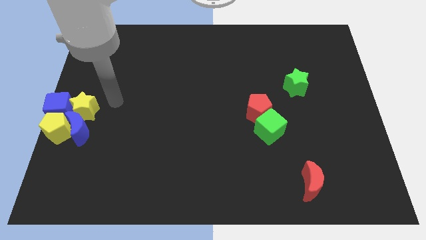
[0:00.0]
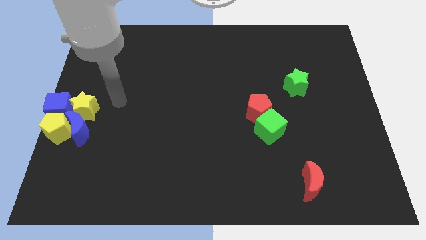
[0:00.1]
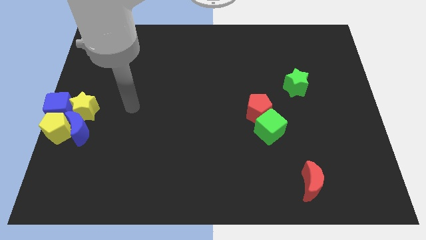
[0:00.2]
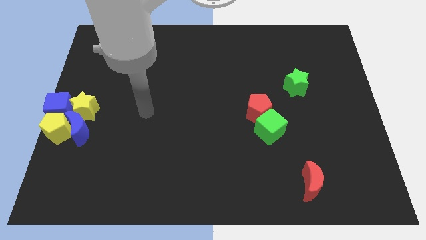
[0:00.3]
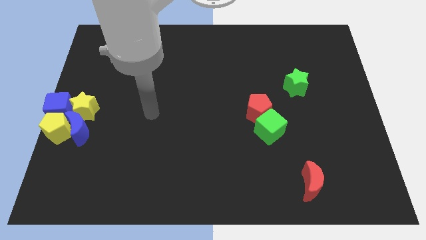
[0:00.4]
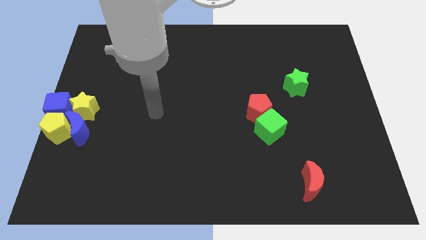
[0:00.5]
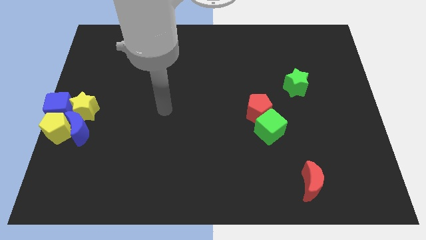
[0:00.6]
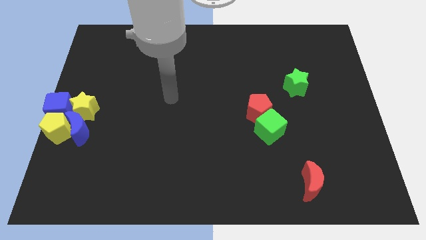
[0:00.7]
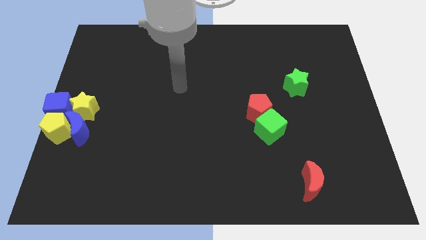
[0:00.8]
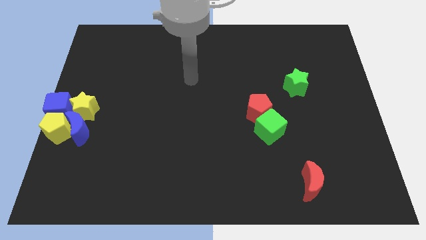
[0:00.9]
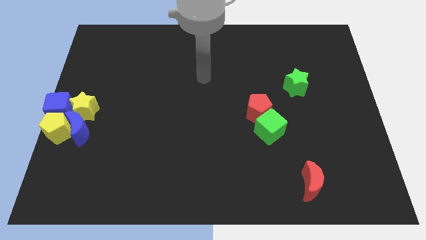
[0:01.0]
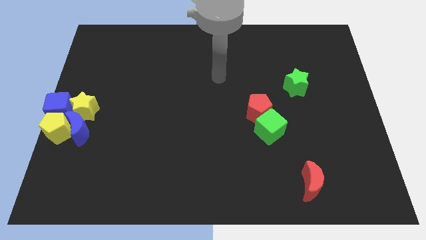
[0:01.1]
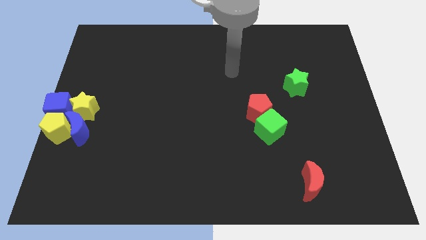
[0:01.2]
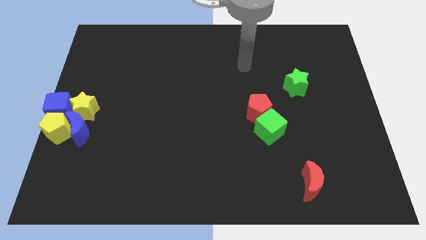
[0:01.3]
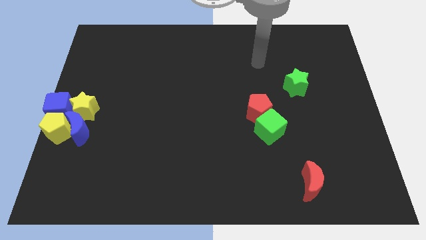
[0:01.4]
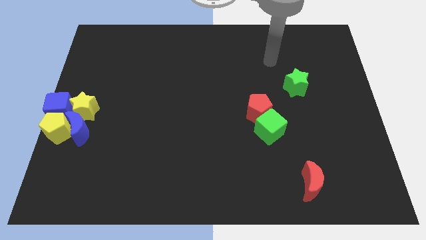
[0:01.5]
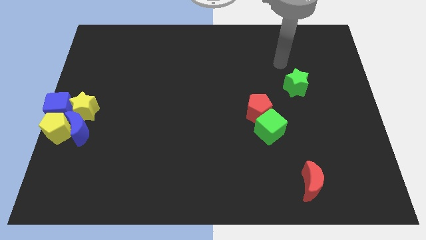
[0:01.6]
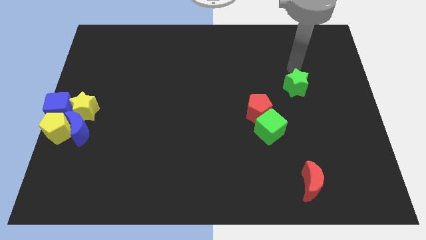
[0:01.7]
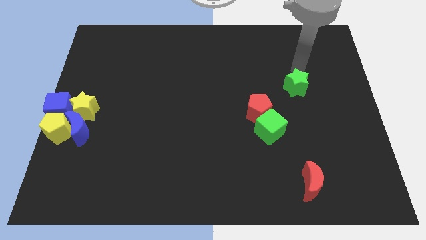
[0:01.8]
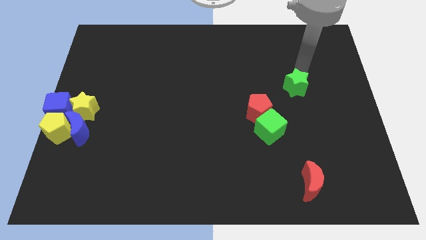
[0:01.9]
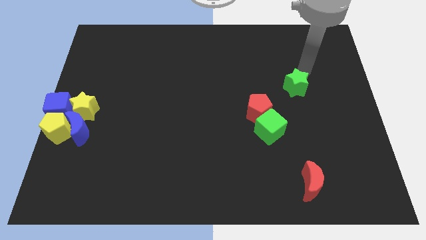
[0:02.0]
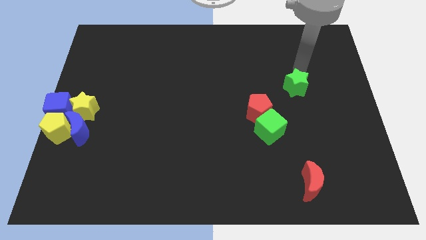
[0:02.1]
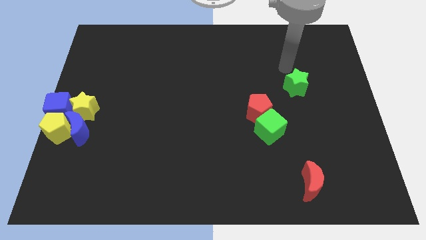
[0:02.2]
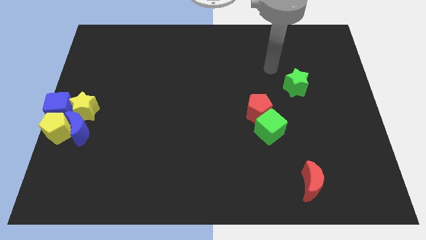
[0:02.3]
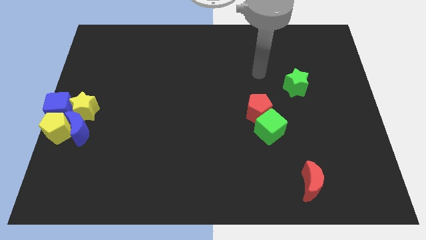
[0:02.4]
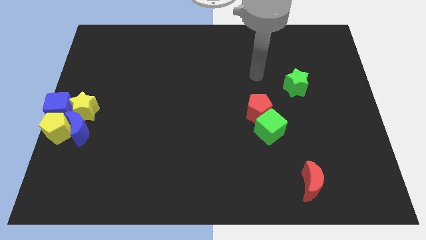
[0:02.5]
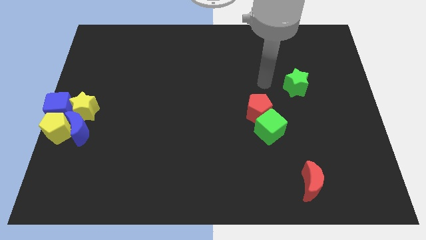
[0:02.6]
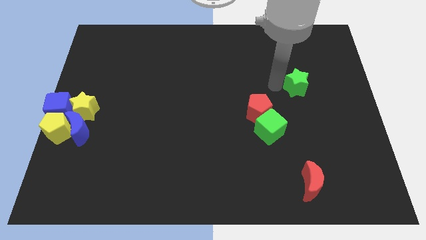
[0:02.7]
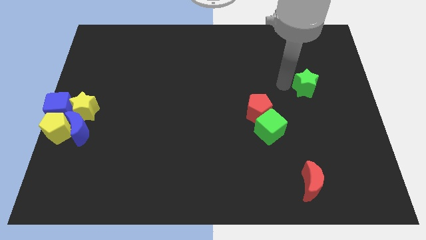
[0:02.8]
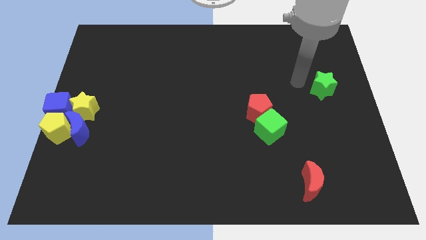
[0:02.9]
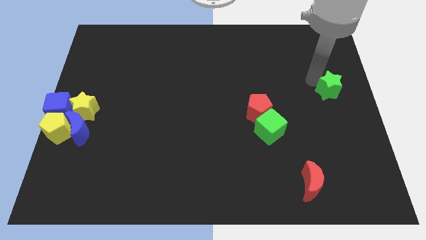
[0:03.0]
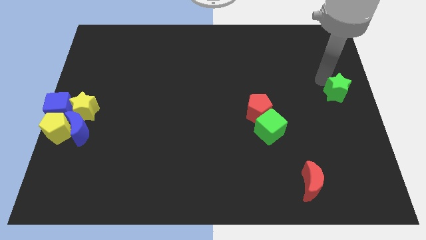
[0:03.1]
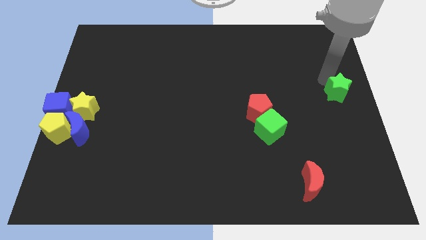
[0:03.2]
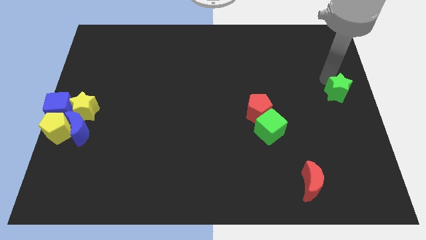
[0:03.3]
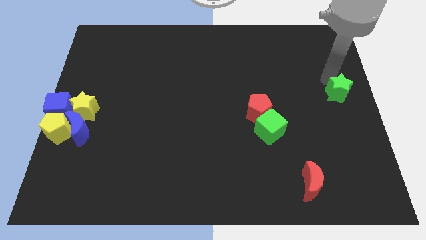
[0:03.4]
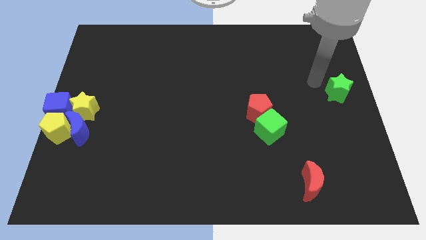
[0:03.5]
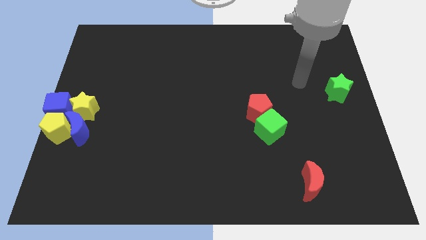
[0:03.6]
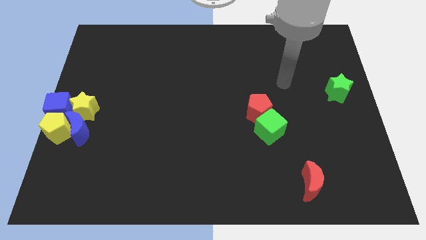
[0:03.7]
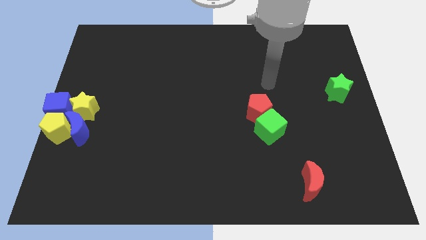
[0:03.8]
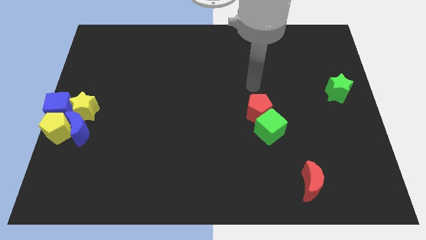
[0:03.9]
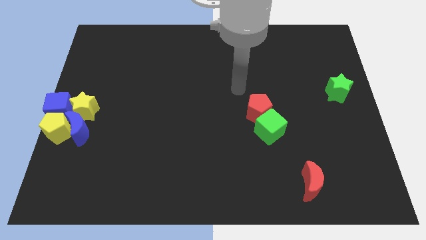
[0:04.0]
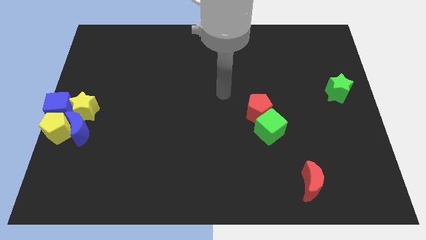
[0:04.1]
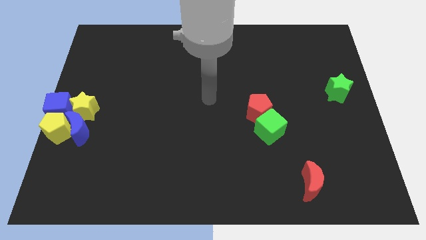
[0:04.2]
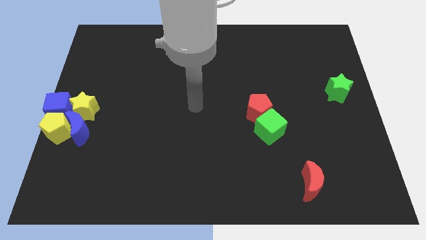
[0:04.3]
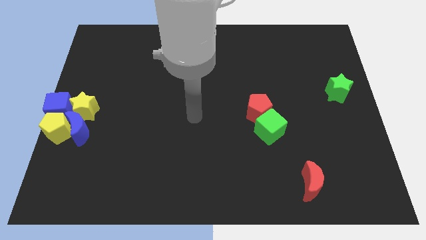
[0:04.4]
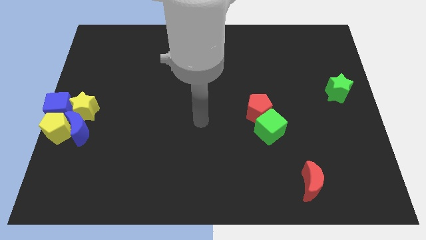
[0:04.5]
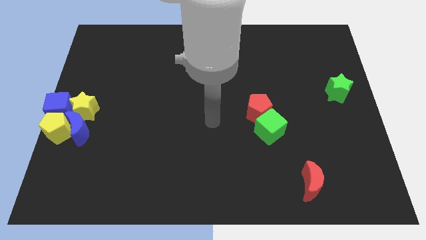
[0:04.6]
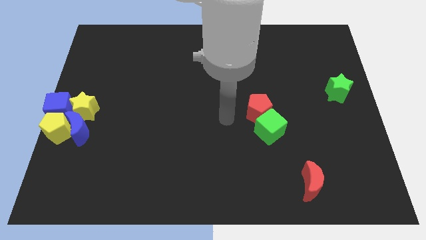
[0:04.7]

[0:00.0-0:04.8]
slide the green star slightly to the center right side of the board

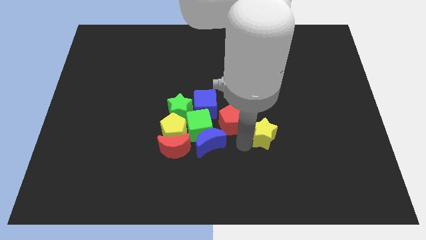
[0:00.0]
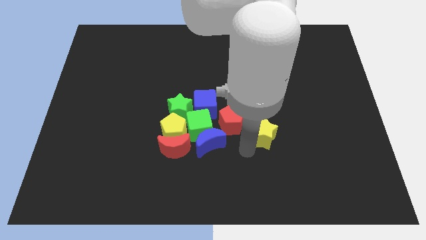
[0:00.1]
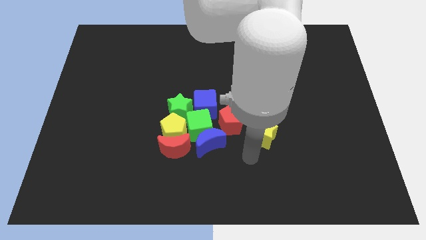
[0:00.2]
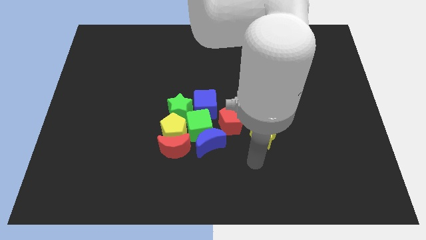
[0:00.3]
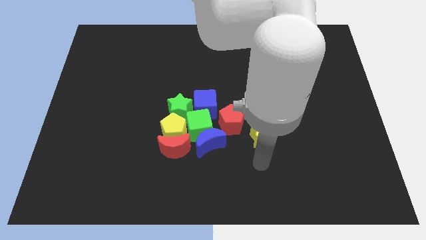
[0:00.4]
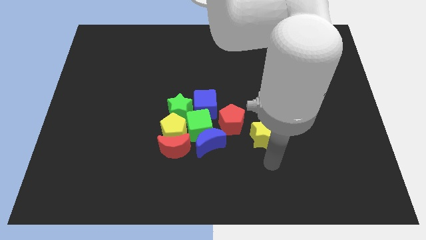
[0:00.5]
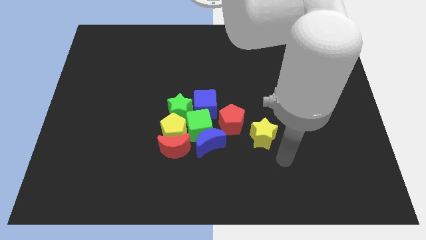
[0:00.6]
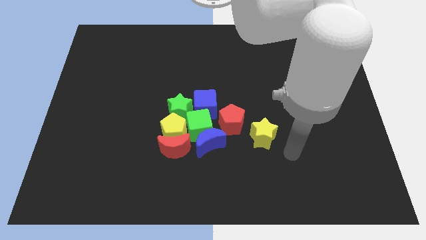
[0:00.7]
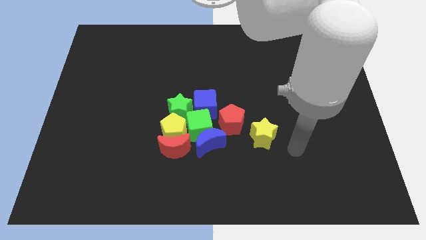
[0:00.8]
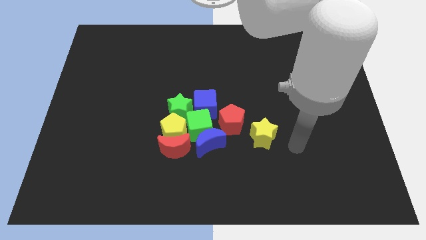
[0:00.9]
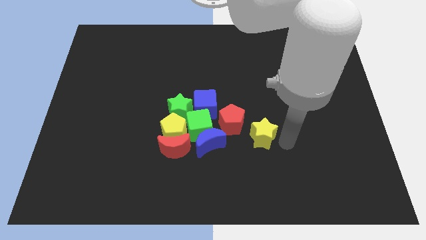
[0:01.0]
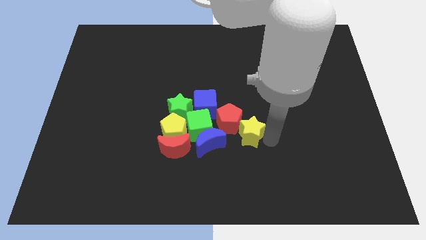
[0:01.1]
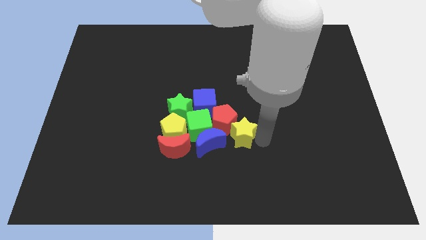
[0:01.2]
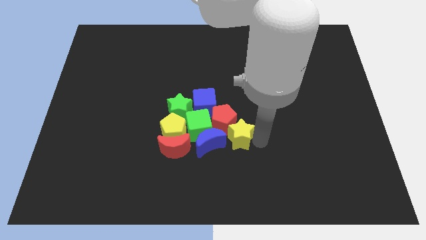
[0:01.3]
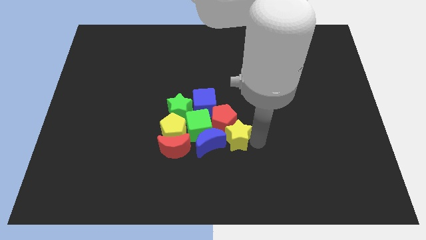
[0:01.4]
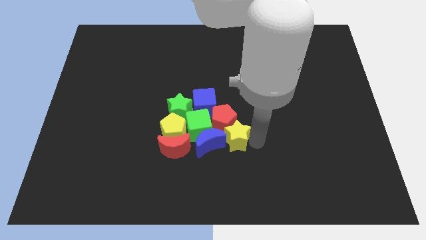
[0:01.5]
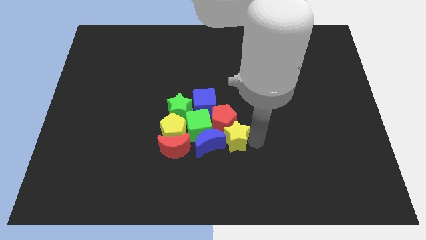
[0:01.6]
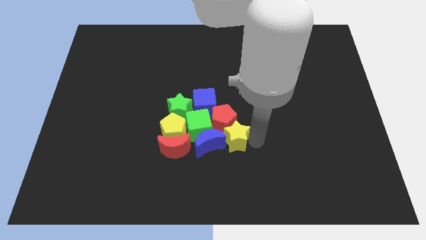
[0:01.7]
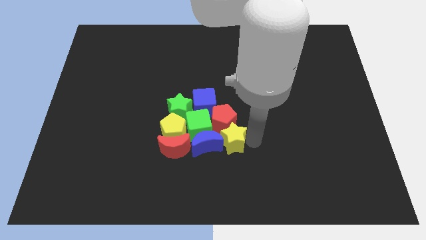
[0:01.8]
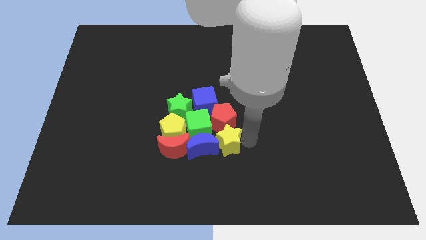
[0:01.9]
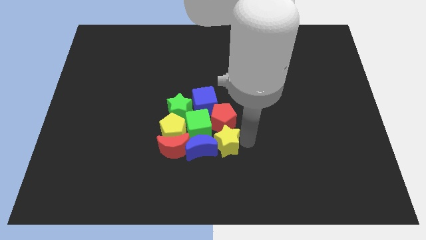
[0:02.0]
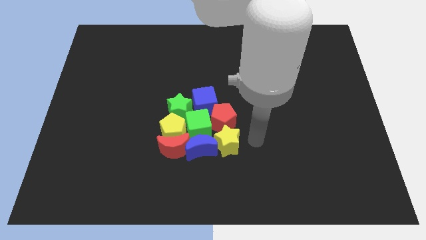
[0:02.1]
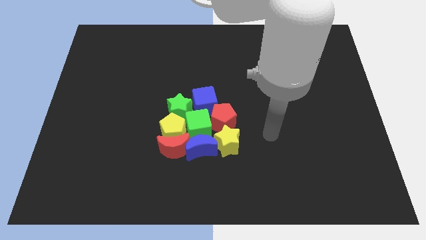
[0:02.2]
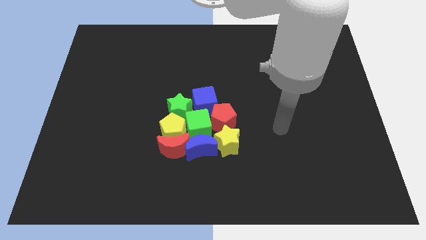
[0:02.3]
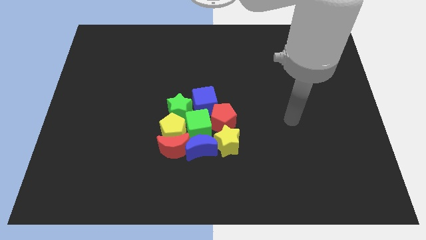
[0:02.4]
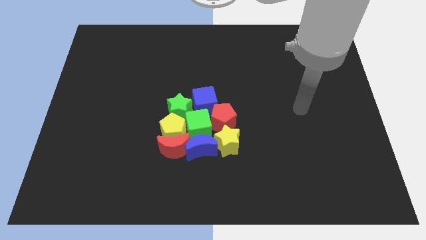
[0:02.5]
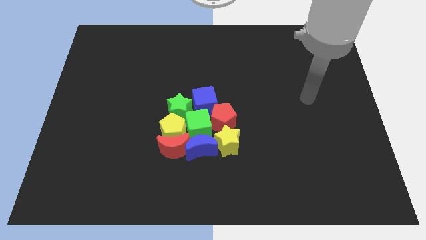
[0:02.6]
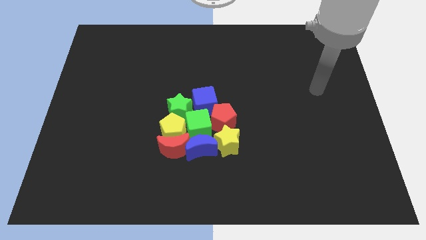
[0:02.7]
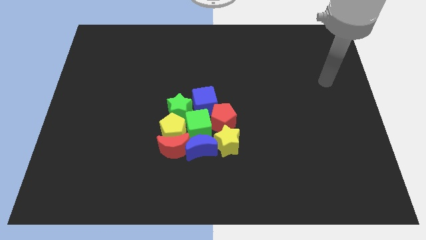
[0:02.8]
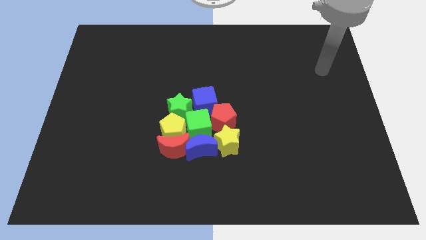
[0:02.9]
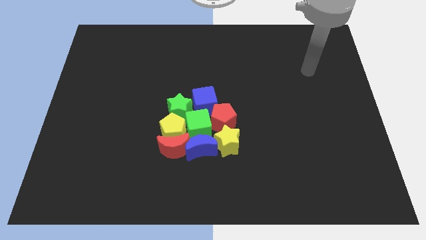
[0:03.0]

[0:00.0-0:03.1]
push yellow star into the group of objects

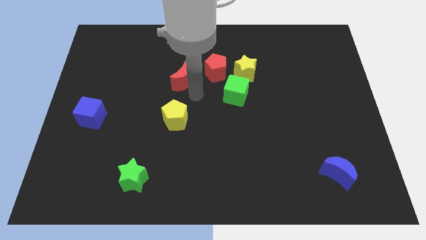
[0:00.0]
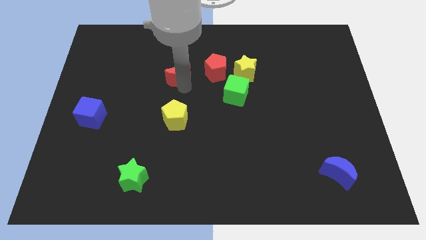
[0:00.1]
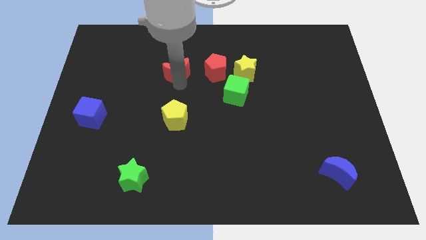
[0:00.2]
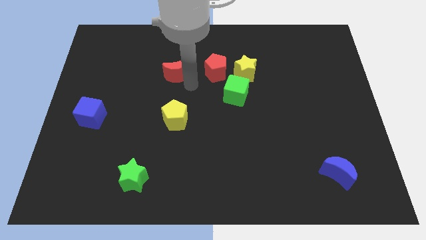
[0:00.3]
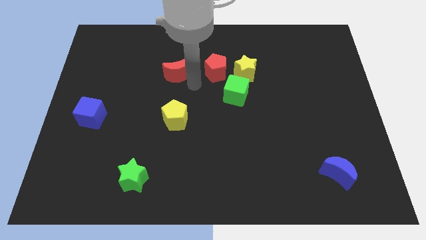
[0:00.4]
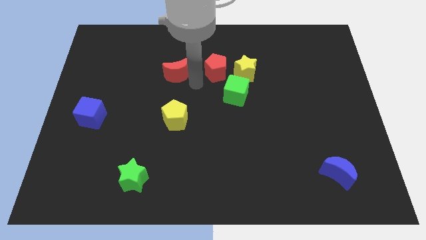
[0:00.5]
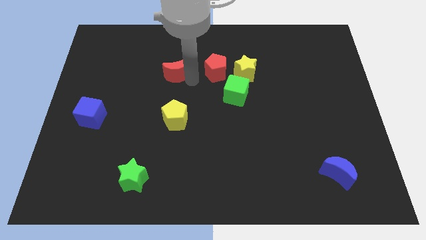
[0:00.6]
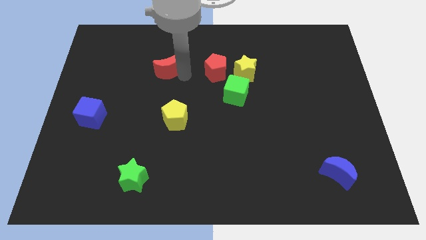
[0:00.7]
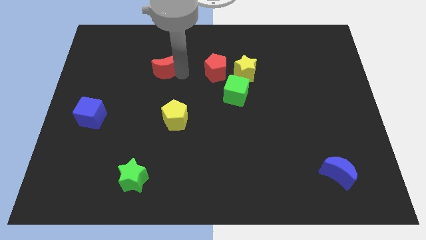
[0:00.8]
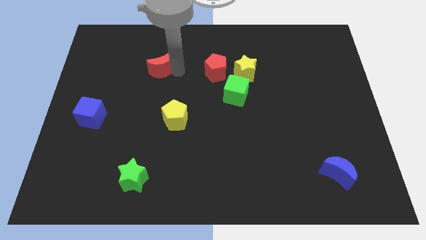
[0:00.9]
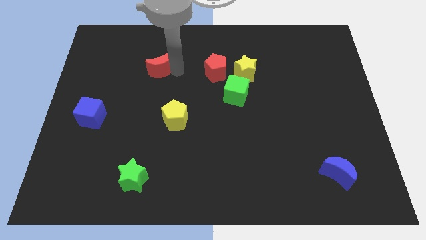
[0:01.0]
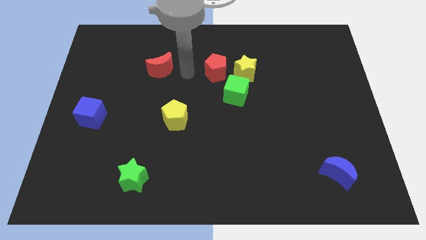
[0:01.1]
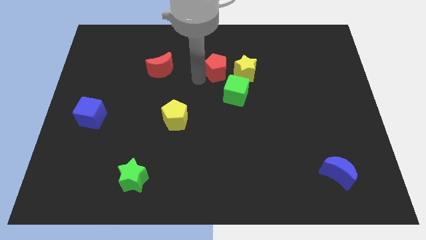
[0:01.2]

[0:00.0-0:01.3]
push the red crescent slightly upwards
